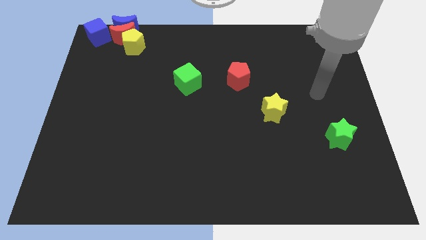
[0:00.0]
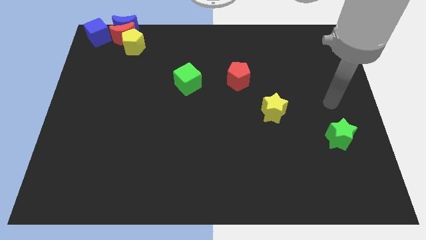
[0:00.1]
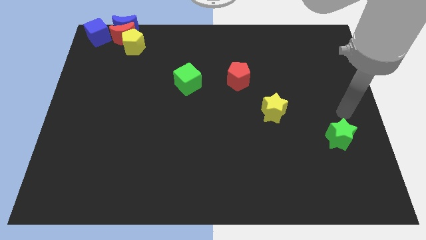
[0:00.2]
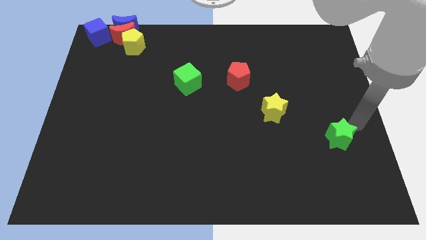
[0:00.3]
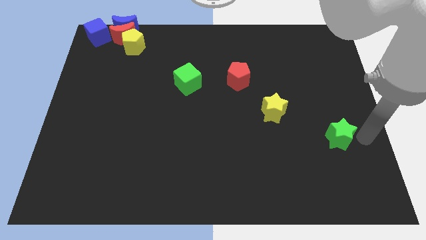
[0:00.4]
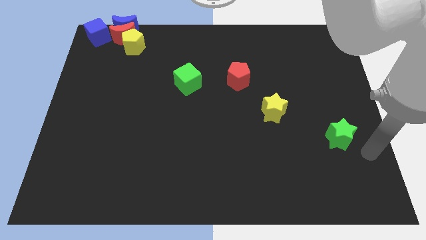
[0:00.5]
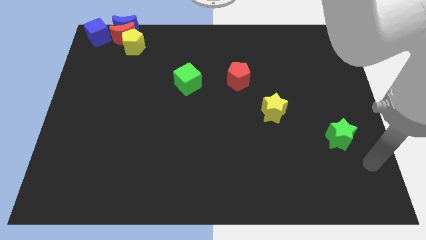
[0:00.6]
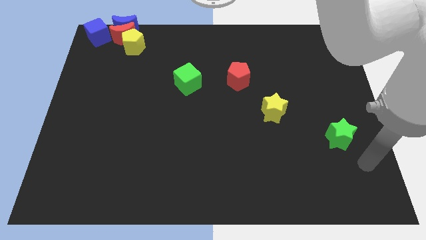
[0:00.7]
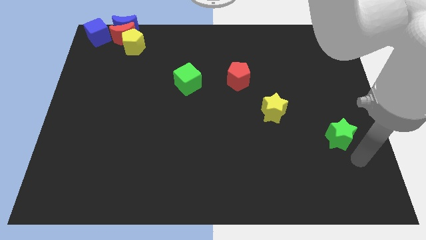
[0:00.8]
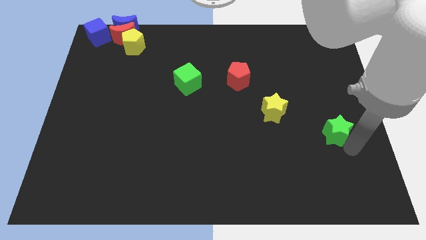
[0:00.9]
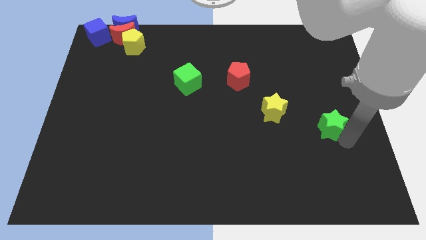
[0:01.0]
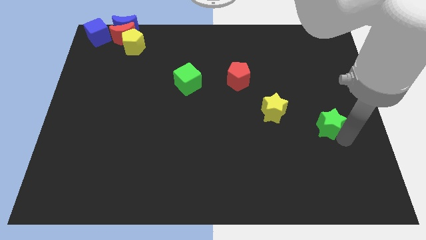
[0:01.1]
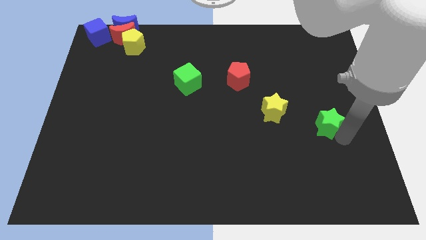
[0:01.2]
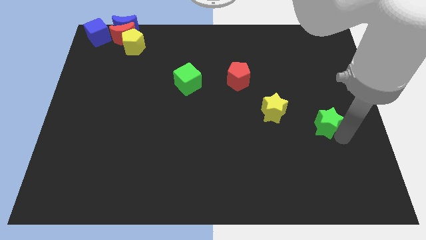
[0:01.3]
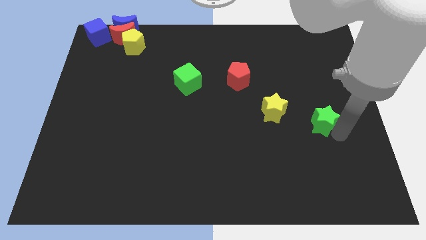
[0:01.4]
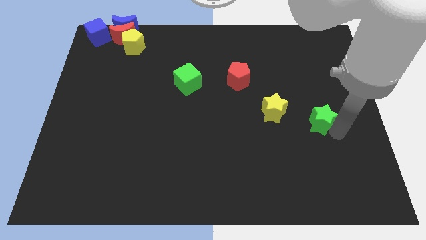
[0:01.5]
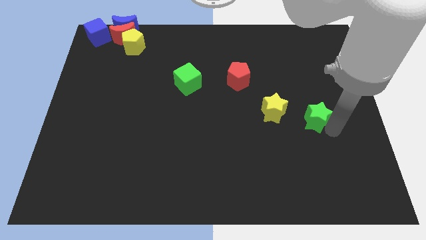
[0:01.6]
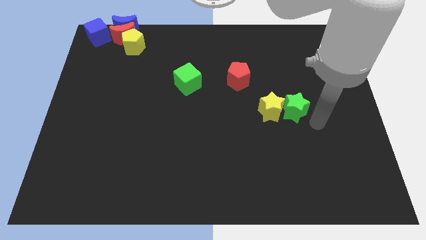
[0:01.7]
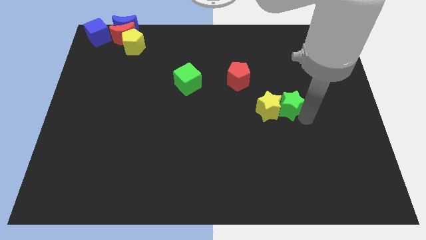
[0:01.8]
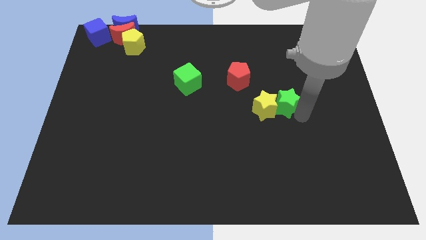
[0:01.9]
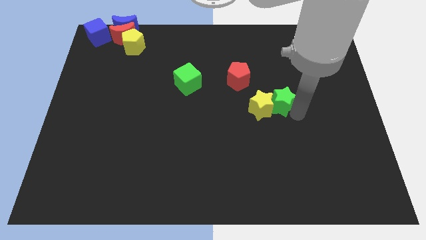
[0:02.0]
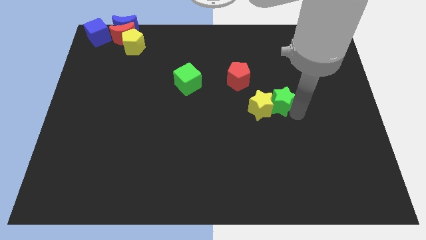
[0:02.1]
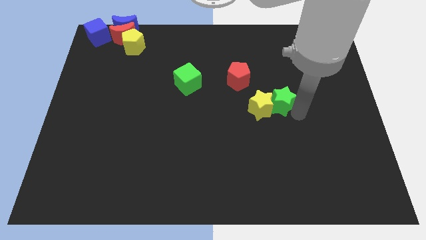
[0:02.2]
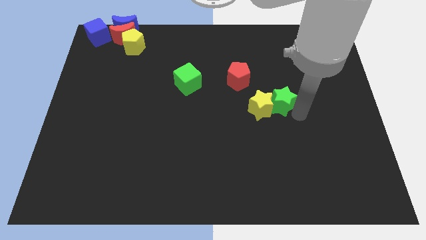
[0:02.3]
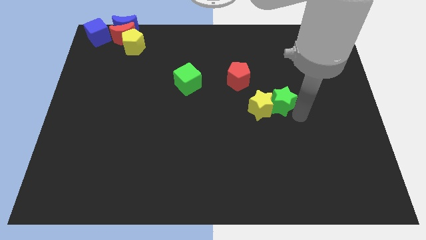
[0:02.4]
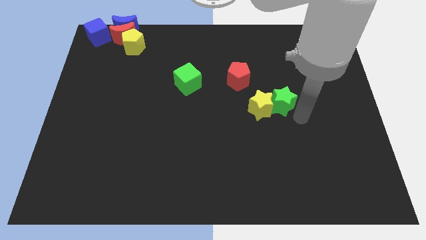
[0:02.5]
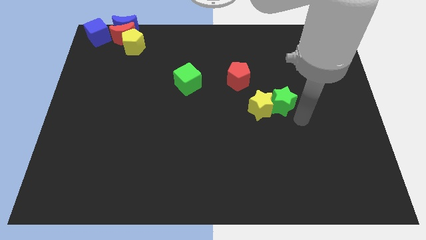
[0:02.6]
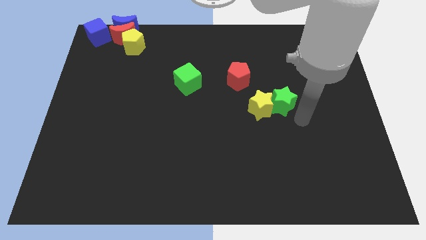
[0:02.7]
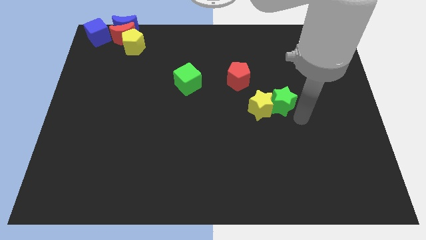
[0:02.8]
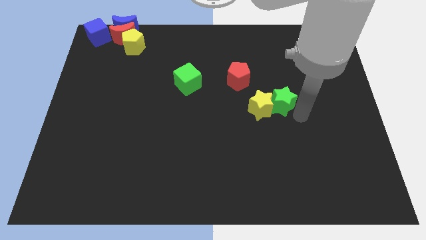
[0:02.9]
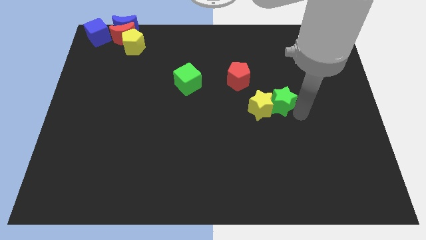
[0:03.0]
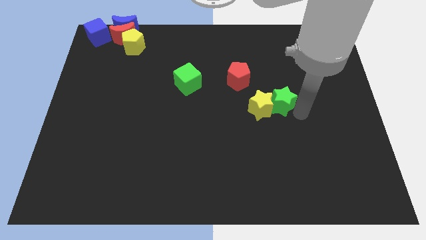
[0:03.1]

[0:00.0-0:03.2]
place the green star close to yellow star

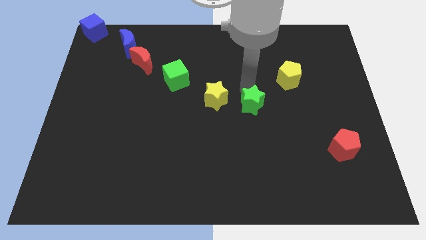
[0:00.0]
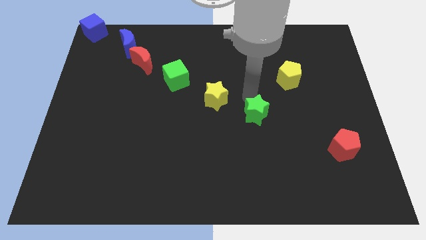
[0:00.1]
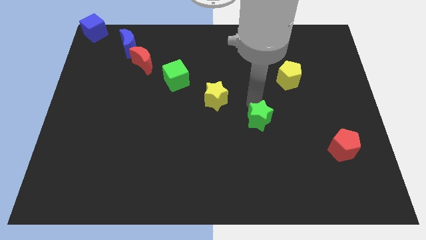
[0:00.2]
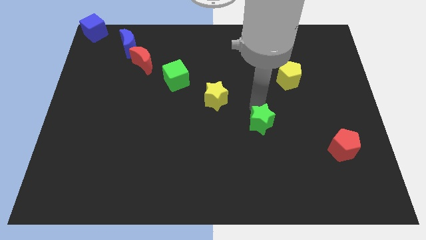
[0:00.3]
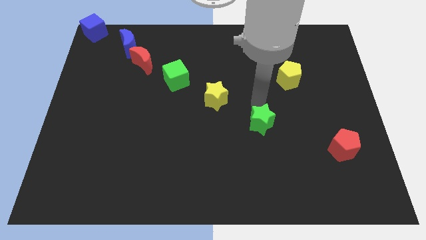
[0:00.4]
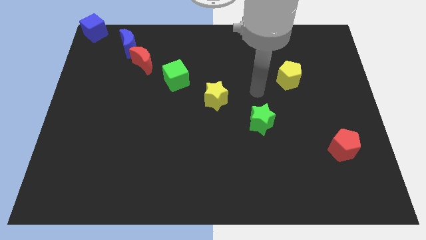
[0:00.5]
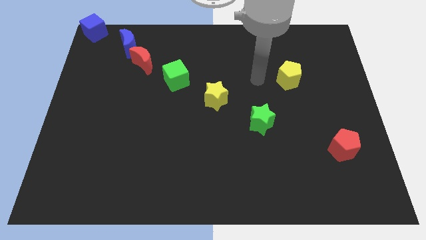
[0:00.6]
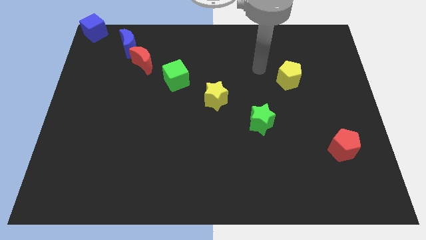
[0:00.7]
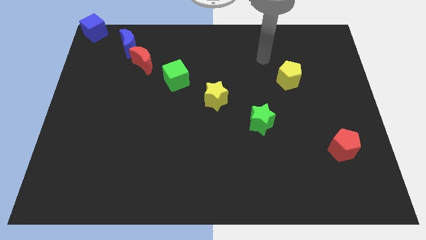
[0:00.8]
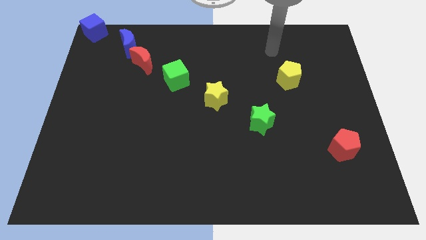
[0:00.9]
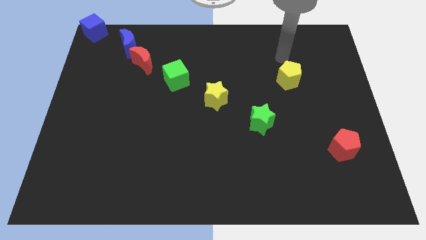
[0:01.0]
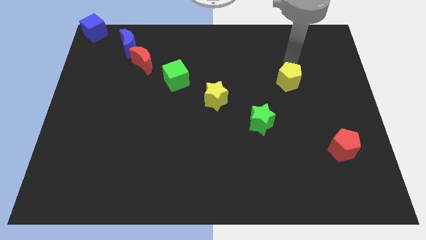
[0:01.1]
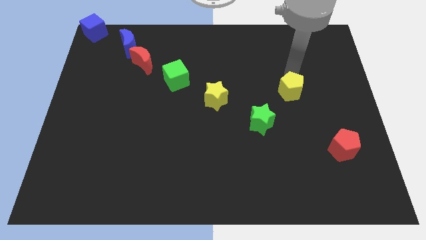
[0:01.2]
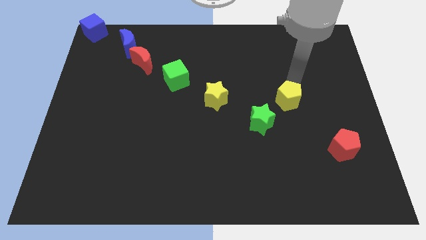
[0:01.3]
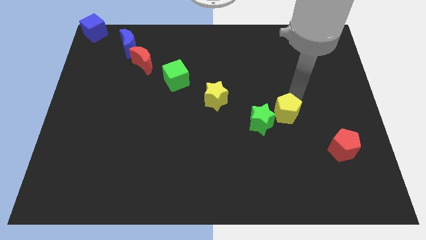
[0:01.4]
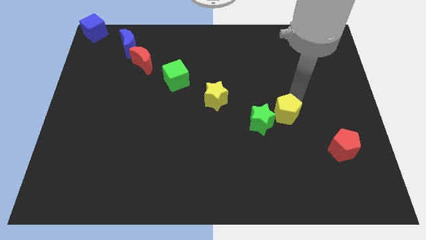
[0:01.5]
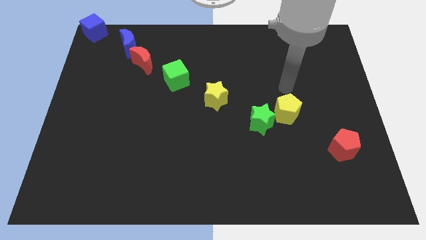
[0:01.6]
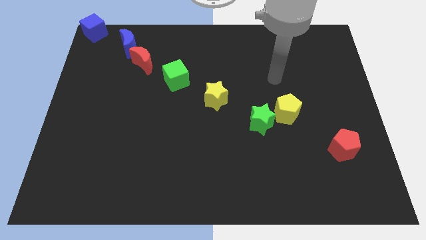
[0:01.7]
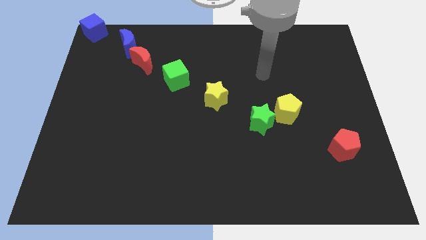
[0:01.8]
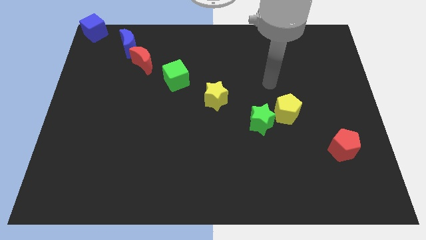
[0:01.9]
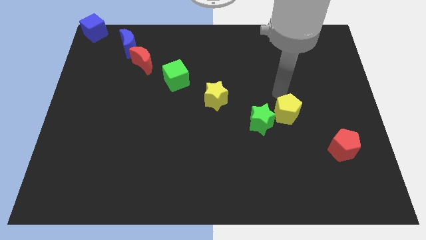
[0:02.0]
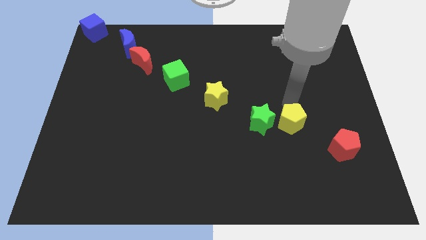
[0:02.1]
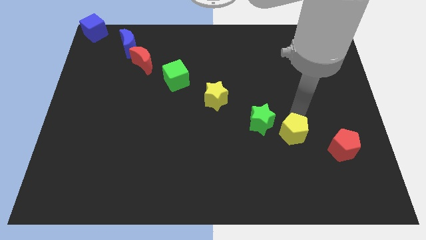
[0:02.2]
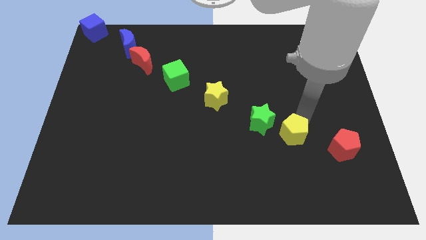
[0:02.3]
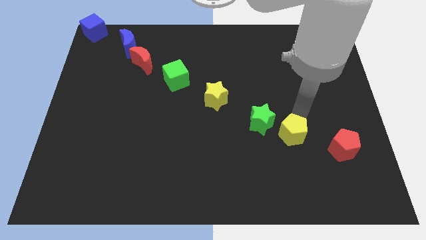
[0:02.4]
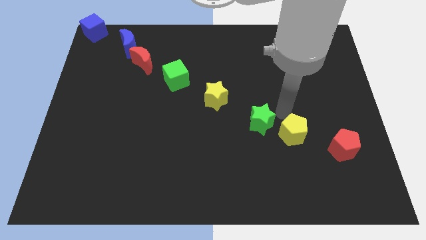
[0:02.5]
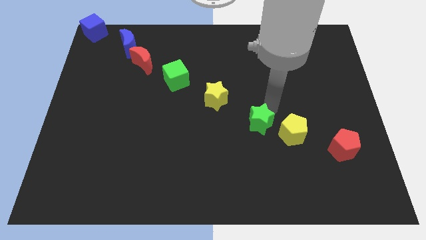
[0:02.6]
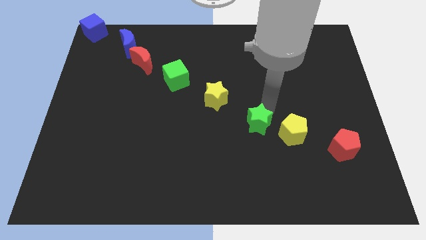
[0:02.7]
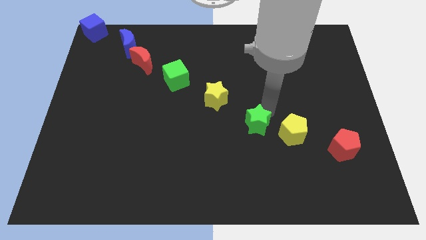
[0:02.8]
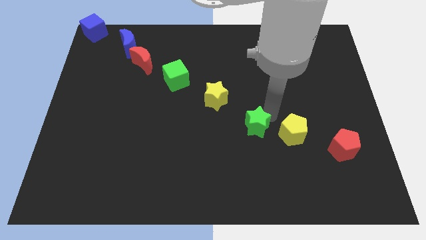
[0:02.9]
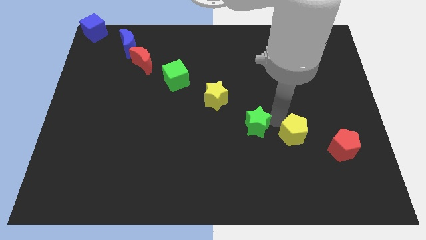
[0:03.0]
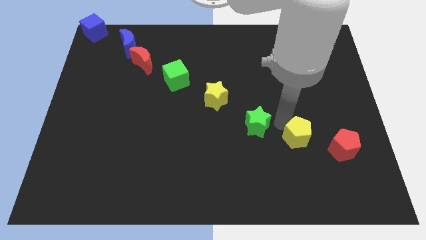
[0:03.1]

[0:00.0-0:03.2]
place the yellow pentagon between the green star and red pentagon

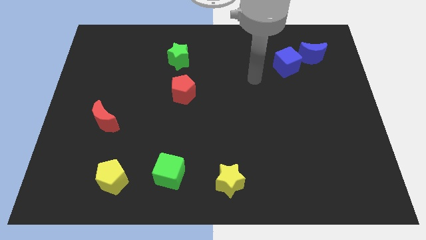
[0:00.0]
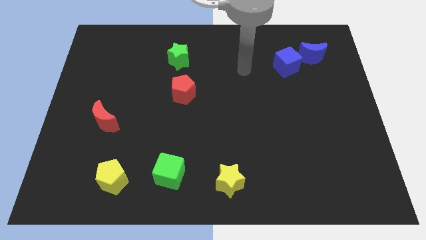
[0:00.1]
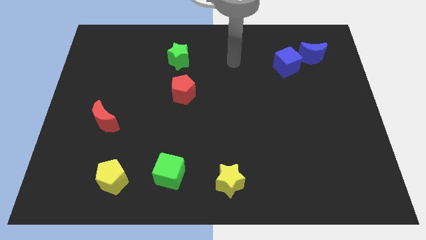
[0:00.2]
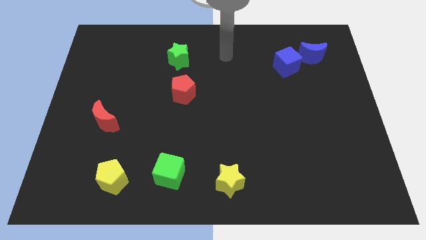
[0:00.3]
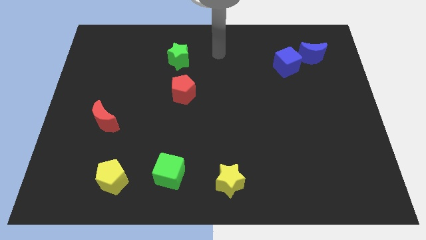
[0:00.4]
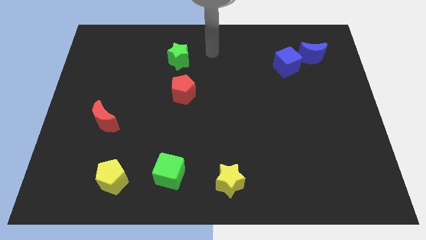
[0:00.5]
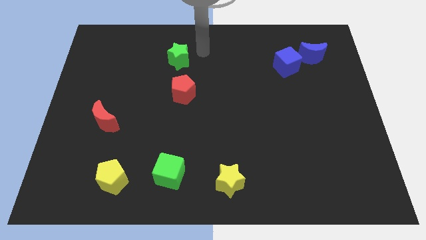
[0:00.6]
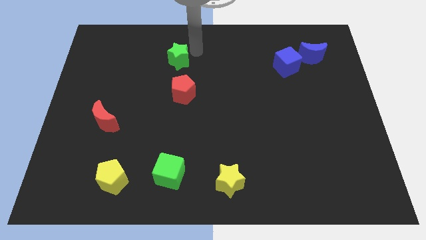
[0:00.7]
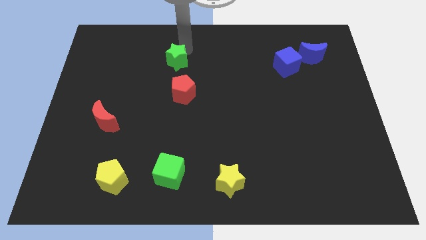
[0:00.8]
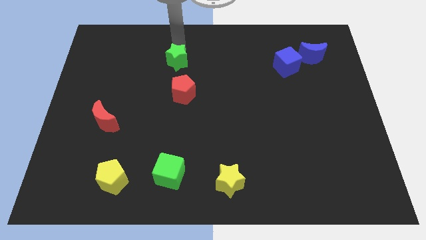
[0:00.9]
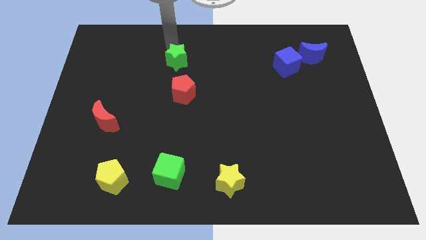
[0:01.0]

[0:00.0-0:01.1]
tap on top side of green star

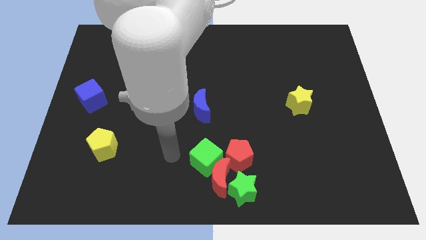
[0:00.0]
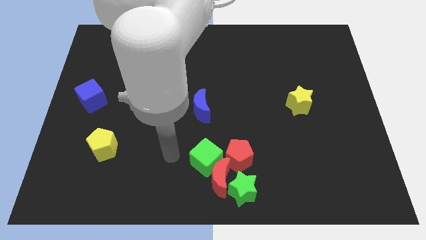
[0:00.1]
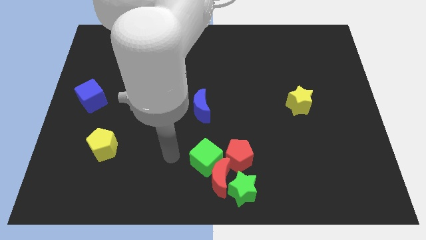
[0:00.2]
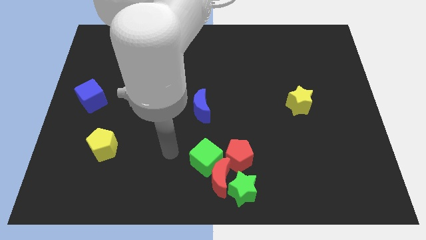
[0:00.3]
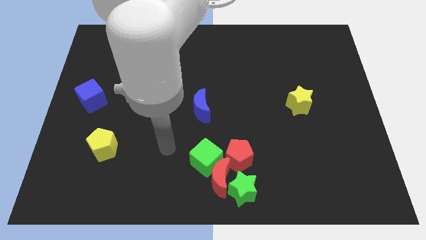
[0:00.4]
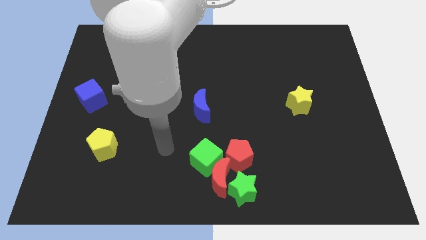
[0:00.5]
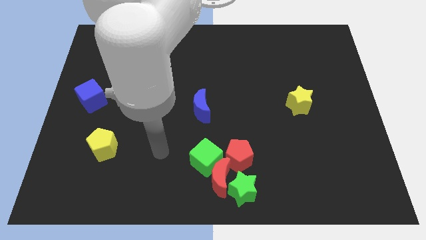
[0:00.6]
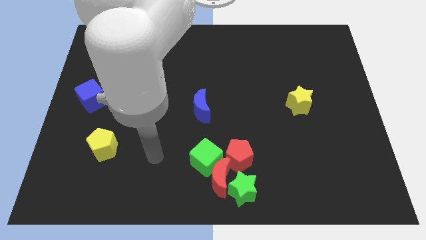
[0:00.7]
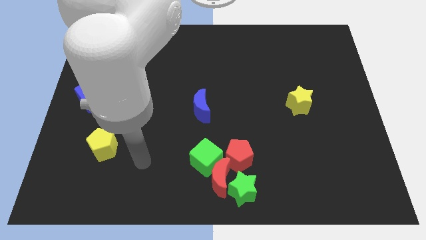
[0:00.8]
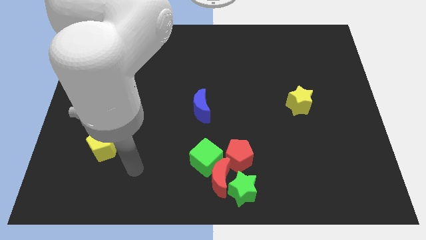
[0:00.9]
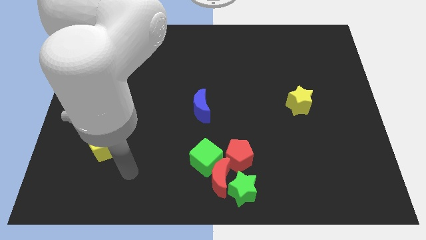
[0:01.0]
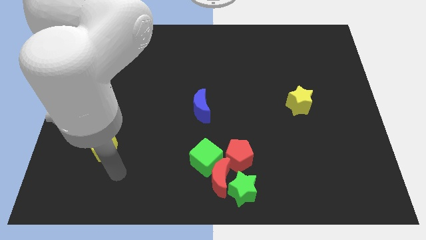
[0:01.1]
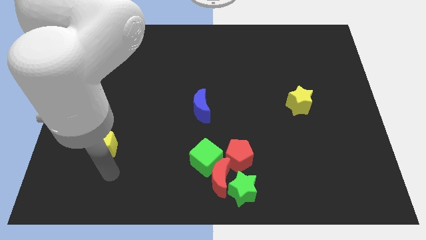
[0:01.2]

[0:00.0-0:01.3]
move your arm to the bottom right of the yellow pentagon

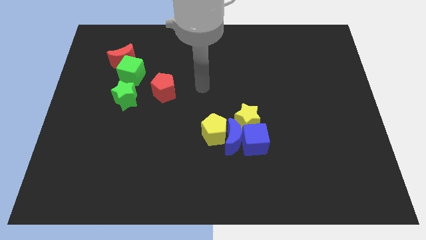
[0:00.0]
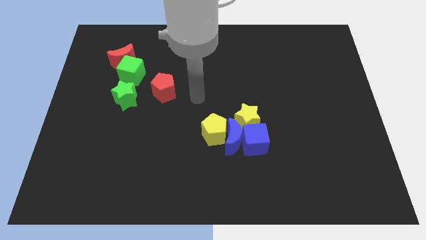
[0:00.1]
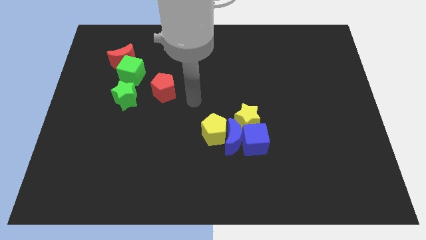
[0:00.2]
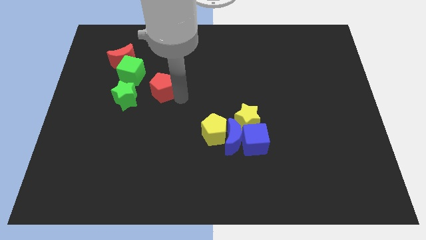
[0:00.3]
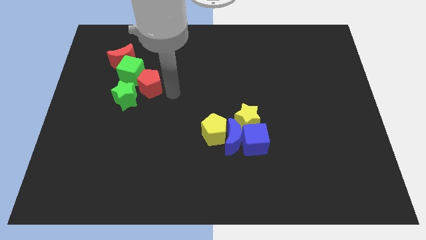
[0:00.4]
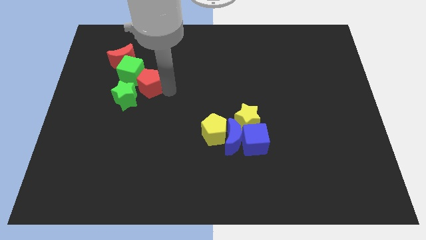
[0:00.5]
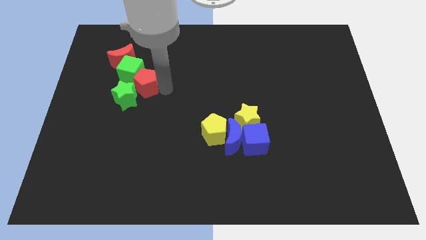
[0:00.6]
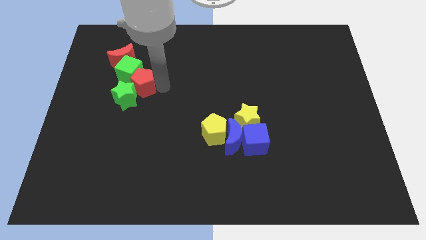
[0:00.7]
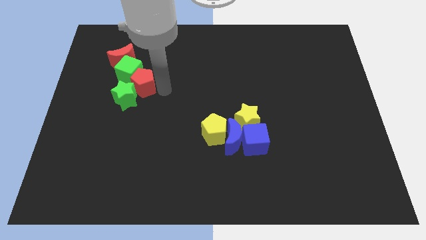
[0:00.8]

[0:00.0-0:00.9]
push the red pentagon into the green cube
